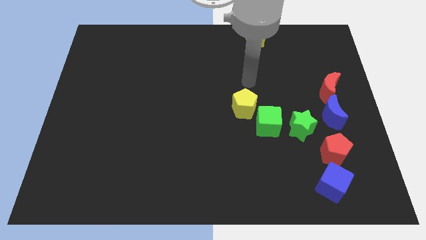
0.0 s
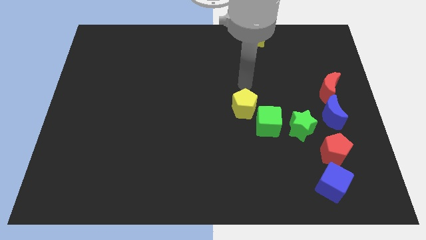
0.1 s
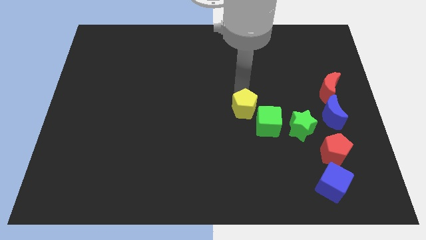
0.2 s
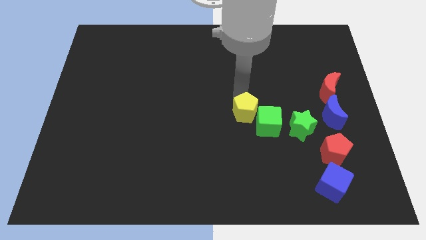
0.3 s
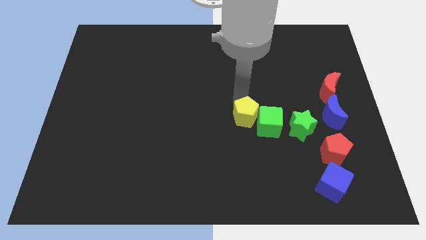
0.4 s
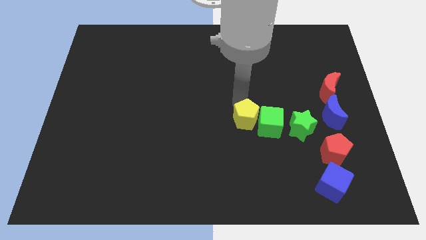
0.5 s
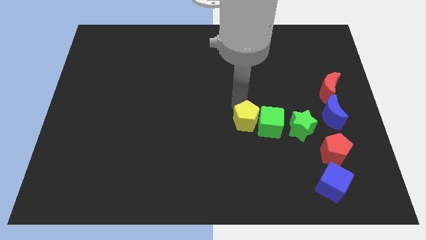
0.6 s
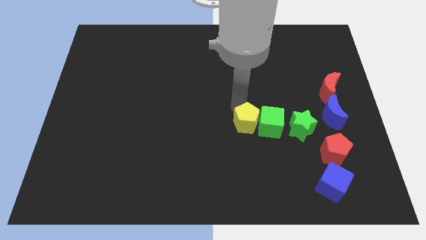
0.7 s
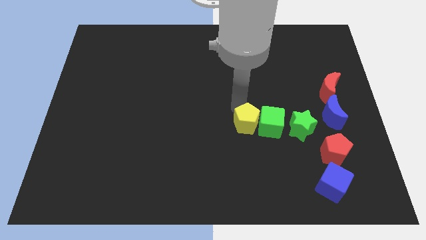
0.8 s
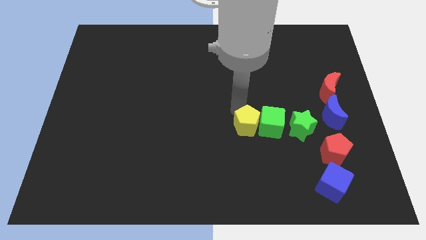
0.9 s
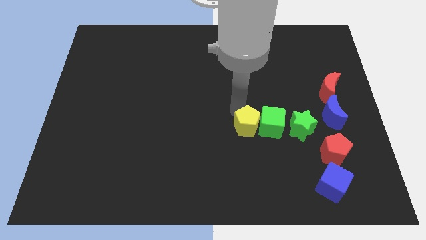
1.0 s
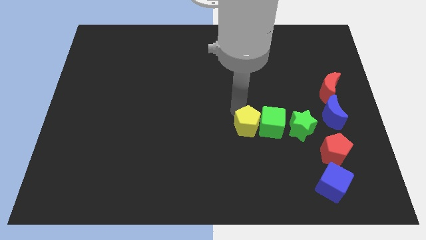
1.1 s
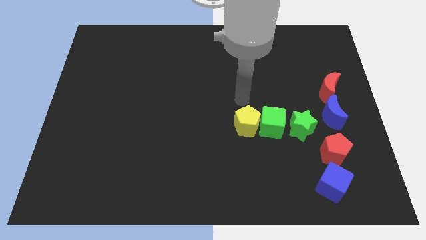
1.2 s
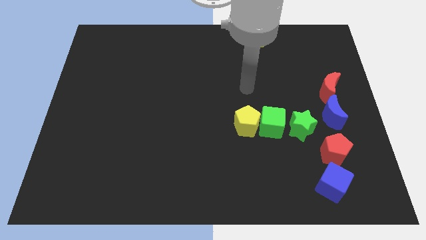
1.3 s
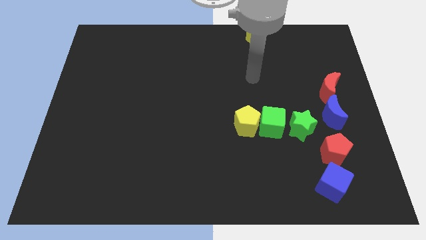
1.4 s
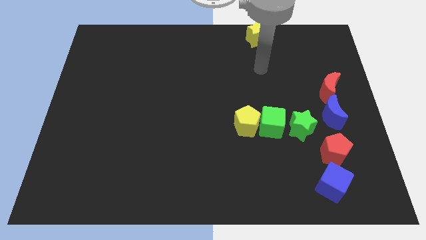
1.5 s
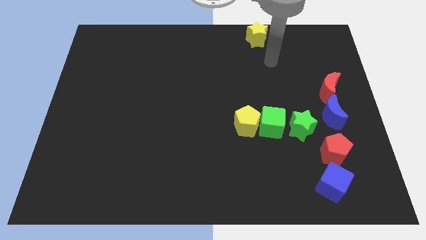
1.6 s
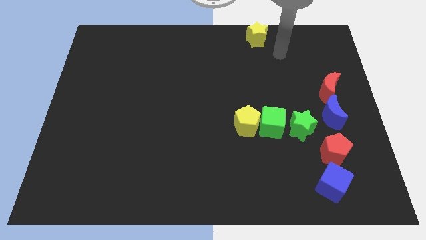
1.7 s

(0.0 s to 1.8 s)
put the yellow pentagon parallel left to the green cube

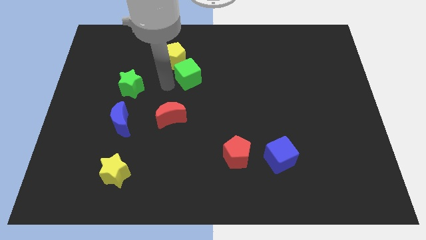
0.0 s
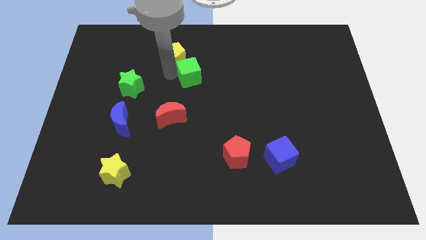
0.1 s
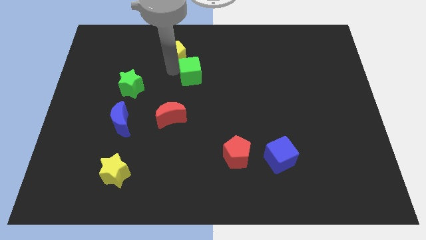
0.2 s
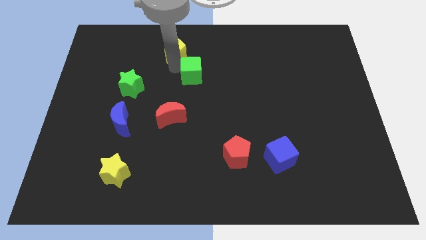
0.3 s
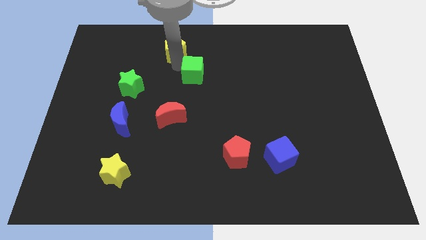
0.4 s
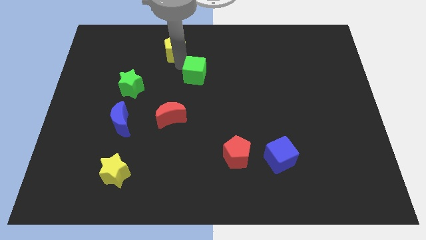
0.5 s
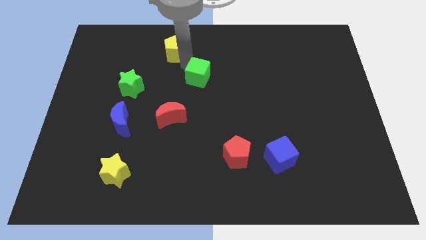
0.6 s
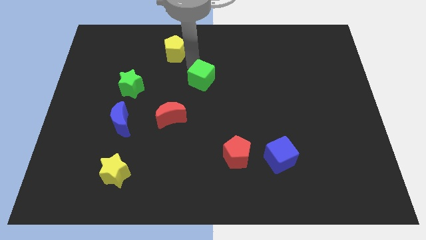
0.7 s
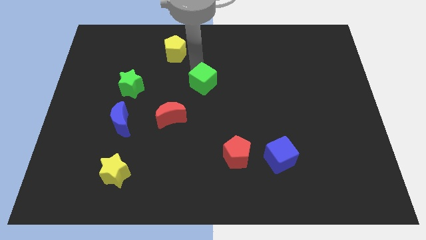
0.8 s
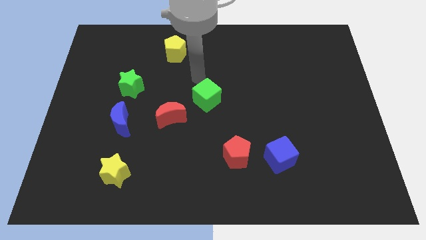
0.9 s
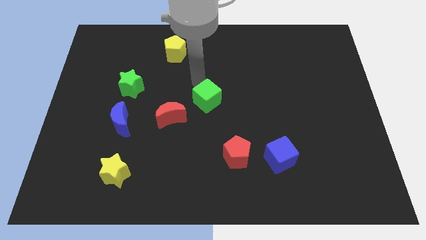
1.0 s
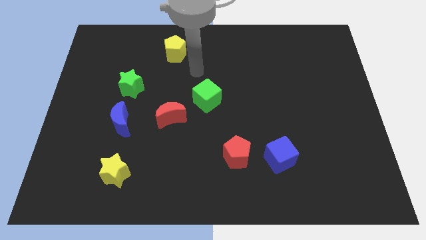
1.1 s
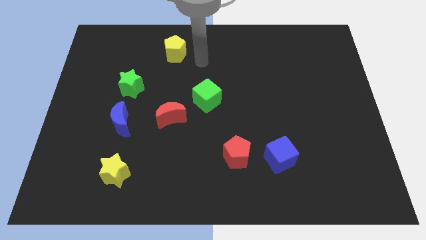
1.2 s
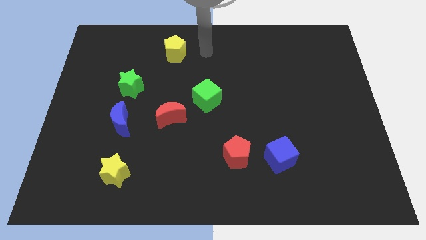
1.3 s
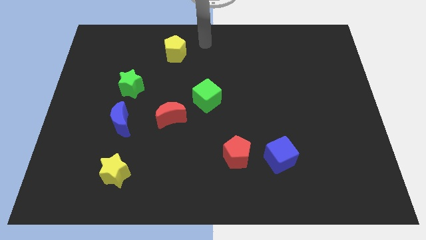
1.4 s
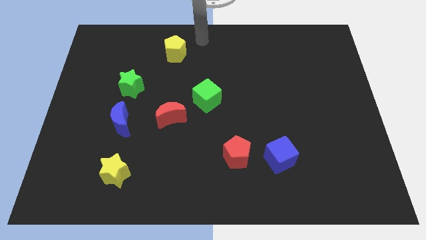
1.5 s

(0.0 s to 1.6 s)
drag green cube near red moon

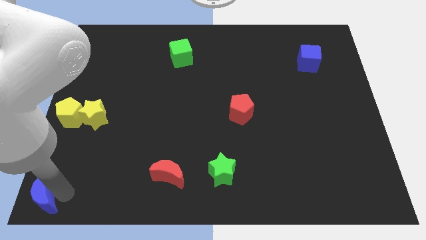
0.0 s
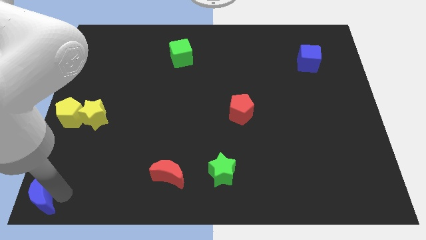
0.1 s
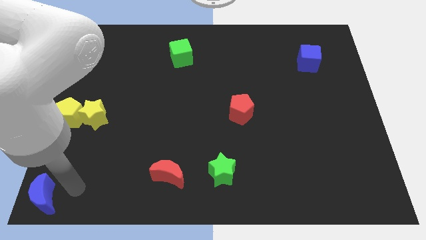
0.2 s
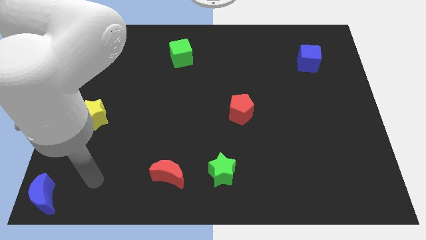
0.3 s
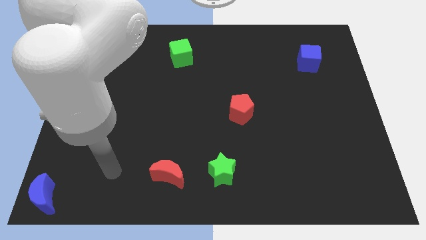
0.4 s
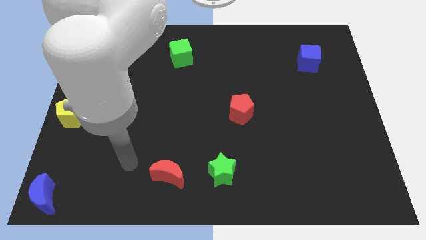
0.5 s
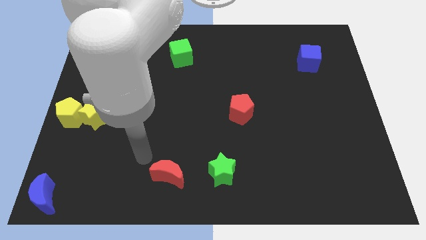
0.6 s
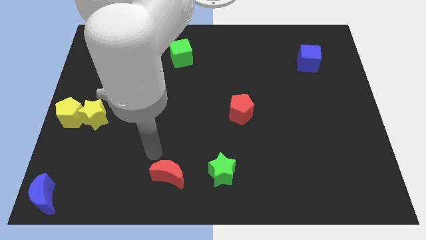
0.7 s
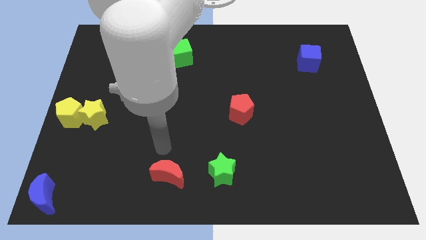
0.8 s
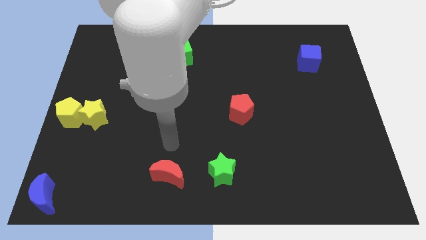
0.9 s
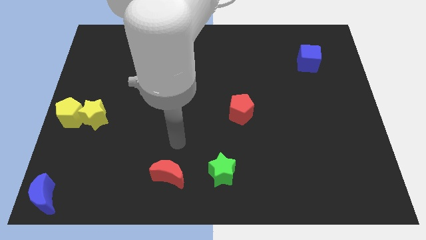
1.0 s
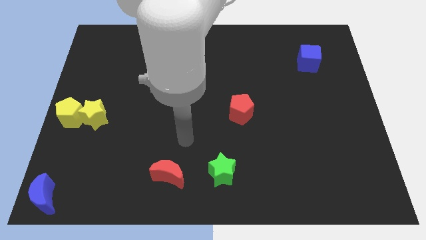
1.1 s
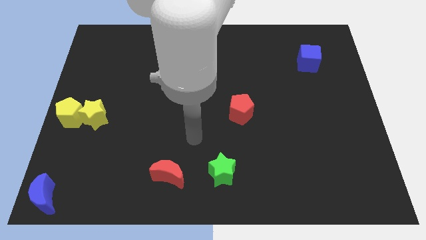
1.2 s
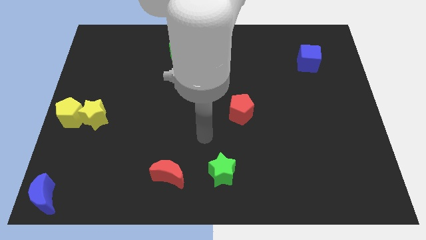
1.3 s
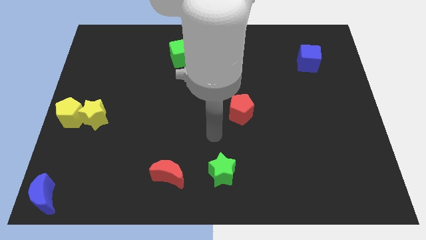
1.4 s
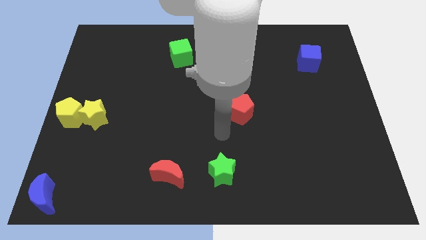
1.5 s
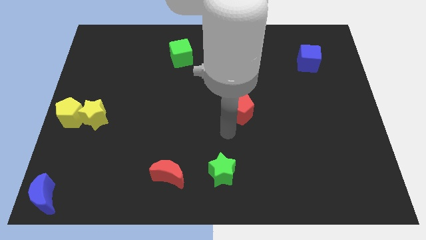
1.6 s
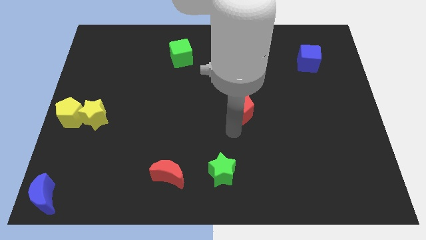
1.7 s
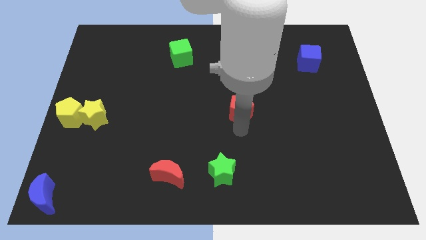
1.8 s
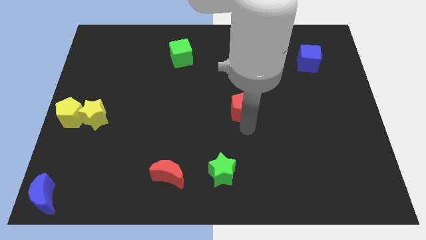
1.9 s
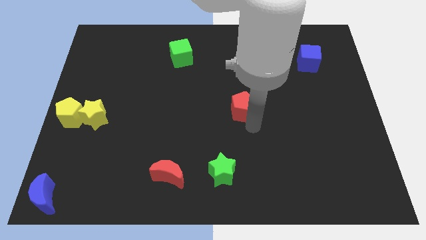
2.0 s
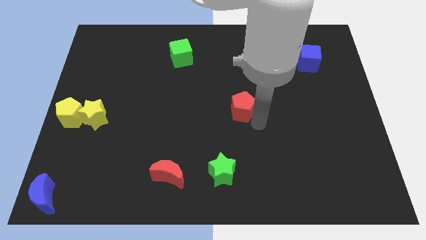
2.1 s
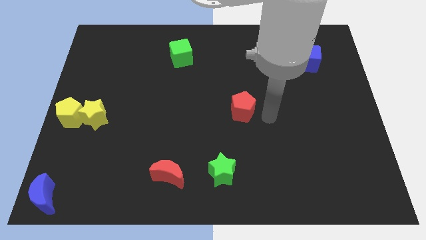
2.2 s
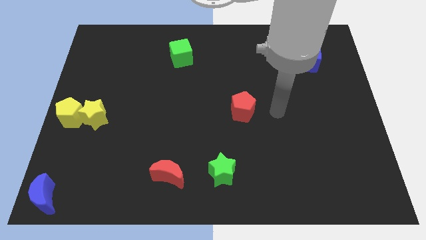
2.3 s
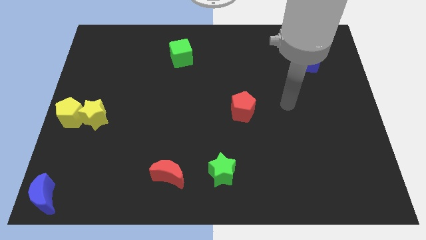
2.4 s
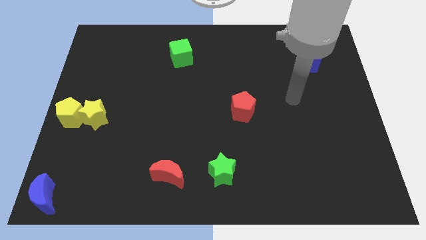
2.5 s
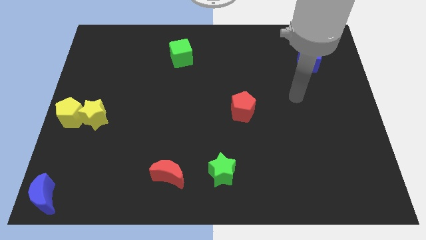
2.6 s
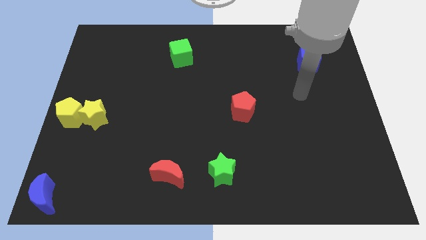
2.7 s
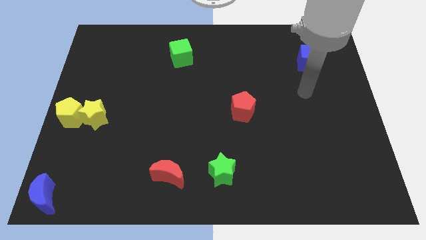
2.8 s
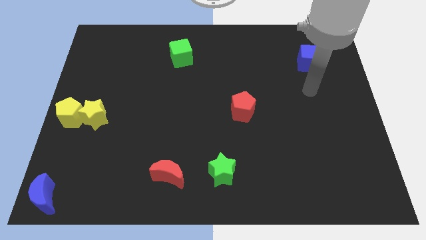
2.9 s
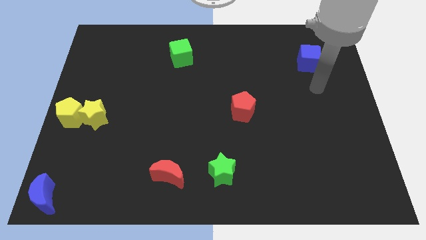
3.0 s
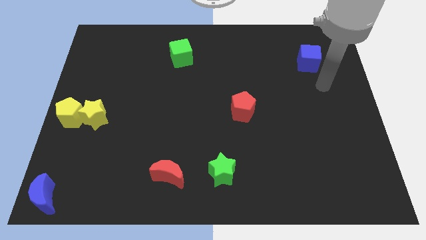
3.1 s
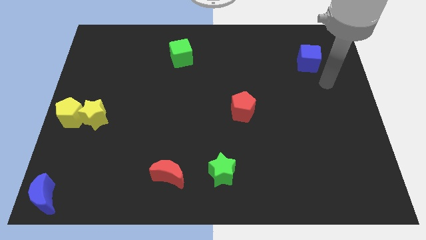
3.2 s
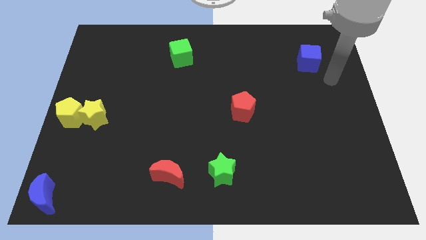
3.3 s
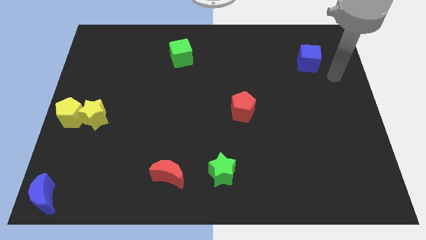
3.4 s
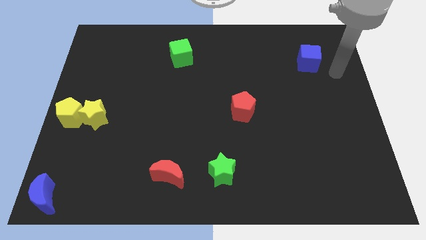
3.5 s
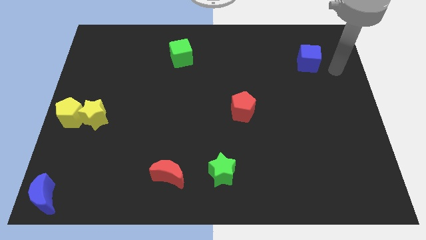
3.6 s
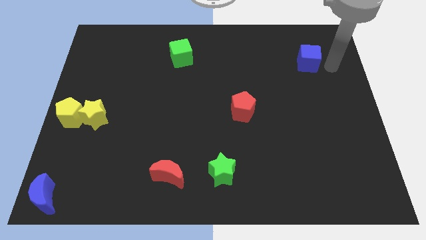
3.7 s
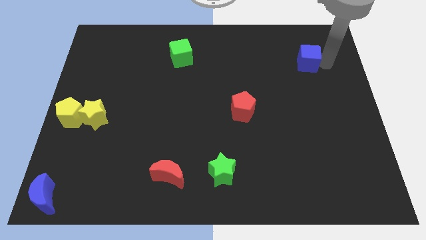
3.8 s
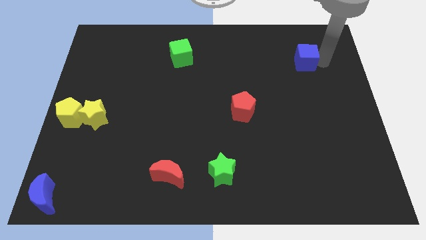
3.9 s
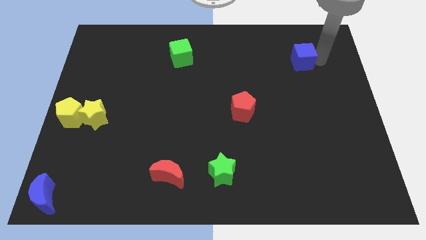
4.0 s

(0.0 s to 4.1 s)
move your arm towards blue cube

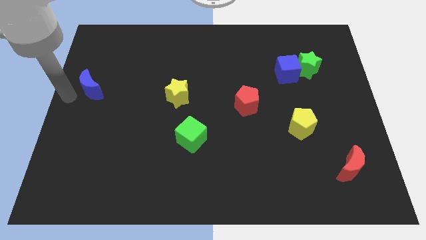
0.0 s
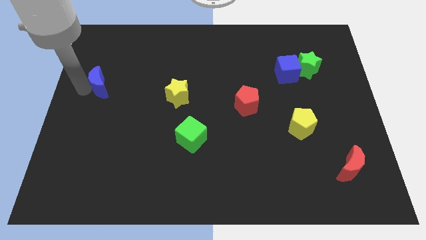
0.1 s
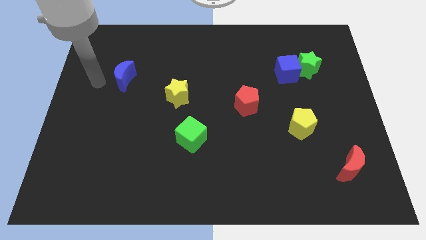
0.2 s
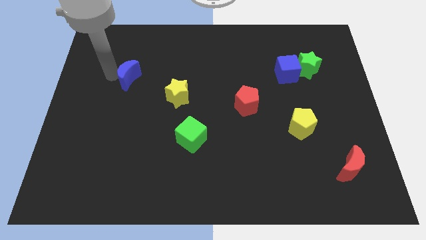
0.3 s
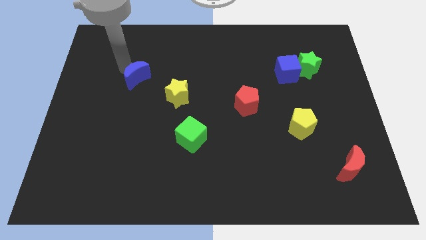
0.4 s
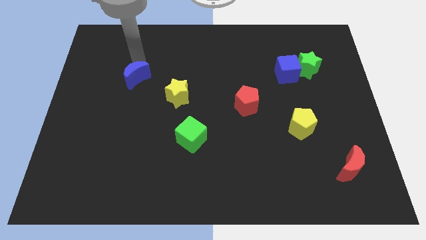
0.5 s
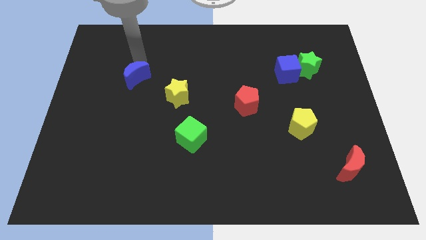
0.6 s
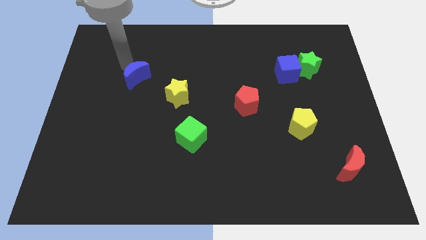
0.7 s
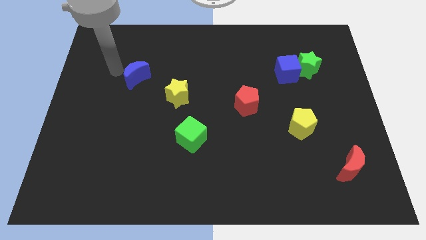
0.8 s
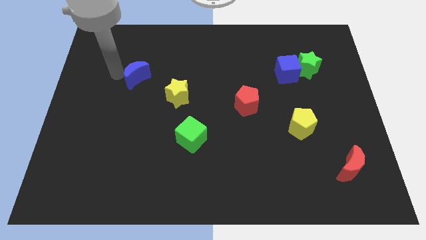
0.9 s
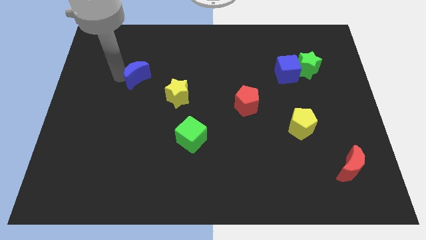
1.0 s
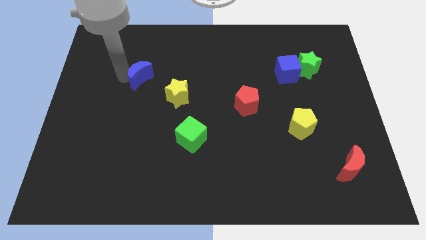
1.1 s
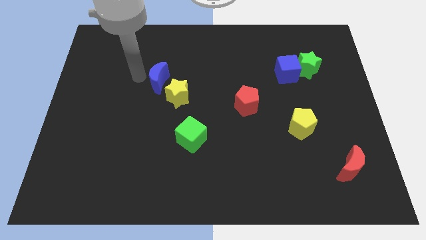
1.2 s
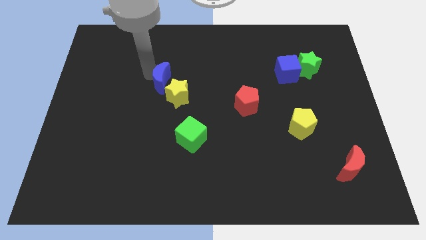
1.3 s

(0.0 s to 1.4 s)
place the blue moon above the yellow star
